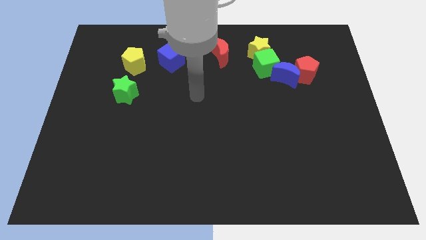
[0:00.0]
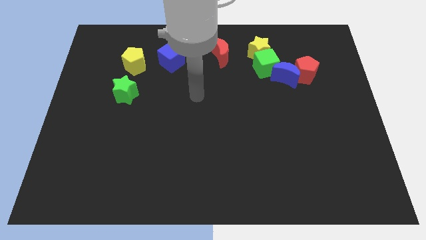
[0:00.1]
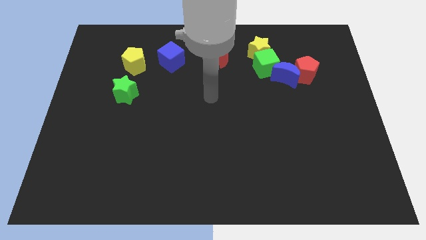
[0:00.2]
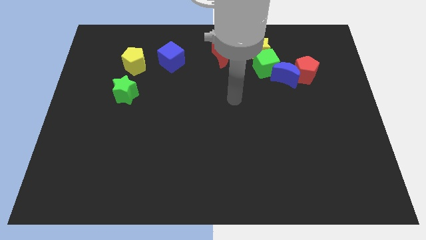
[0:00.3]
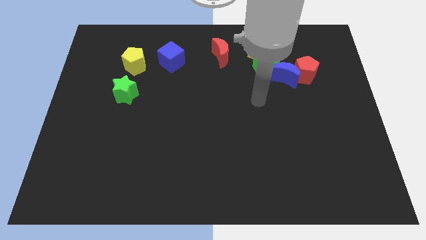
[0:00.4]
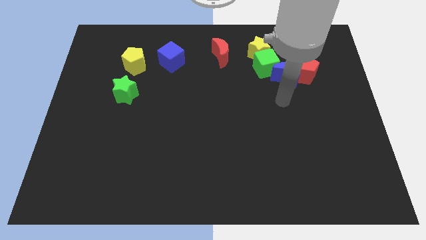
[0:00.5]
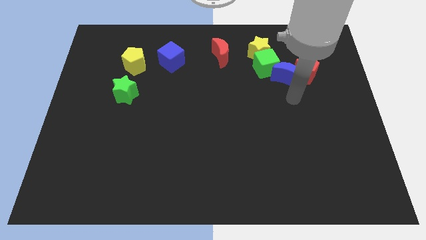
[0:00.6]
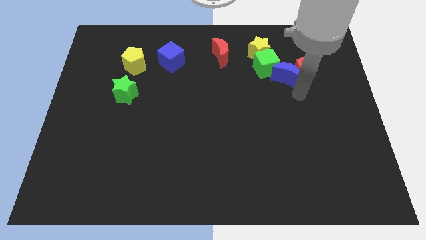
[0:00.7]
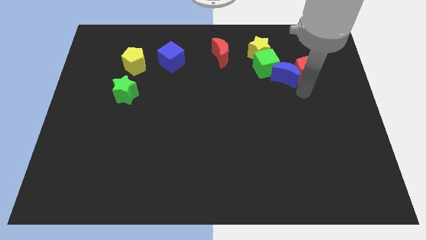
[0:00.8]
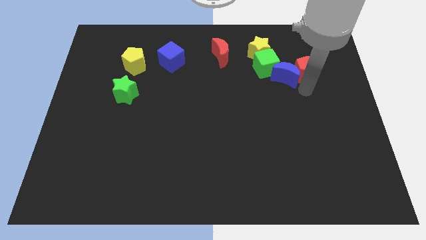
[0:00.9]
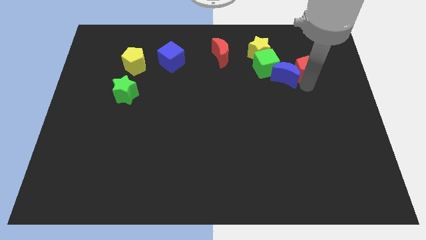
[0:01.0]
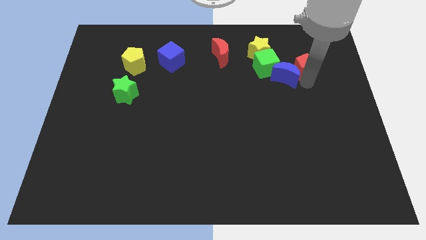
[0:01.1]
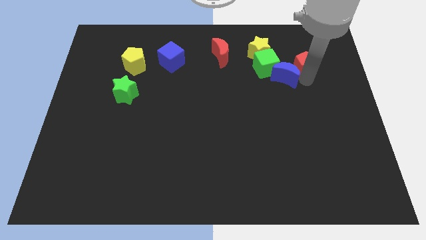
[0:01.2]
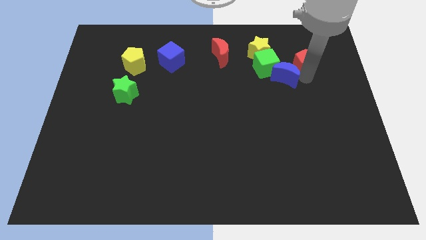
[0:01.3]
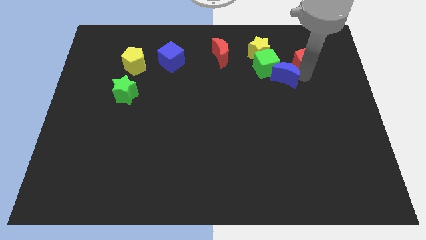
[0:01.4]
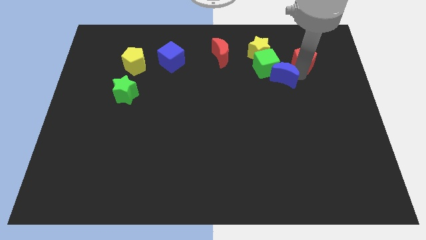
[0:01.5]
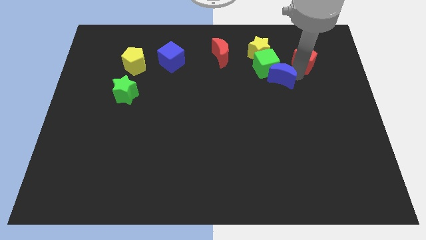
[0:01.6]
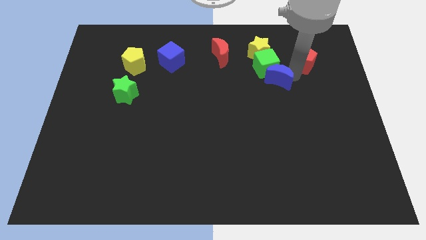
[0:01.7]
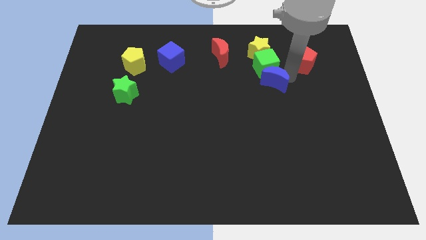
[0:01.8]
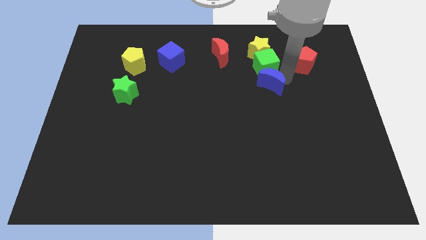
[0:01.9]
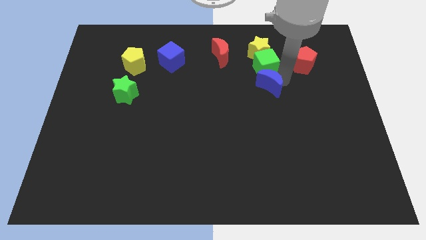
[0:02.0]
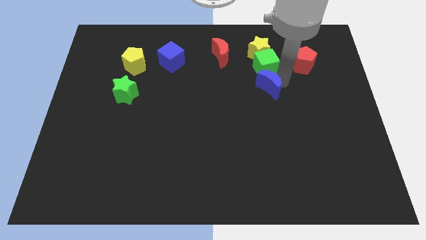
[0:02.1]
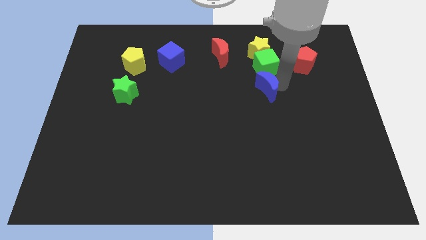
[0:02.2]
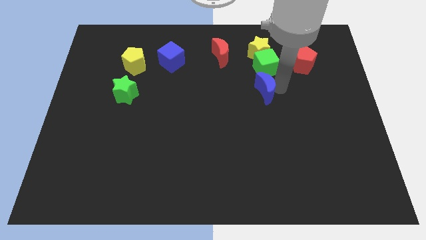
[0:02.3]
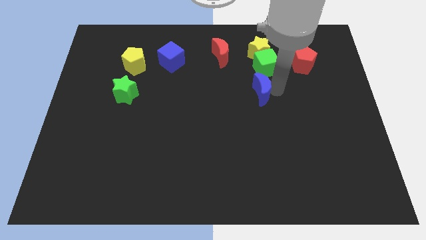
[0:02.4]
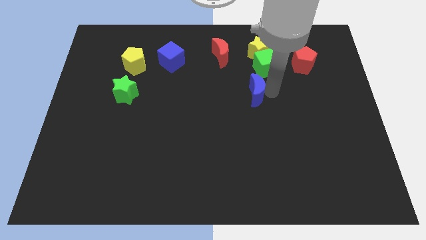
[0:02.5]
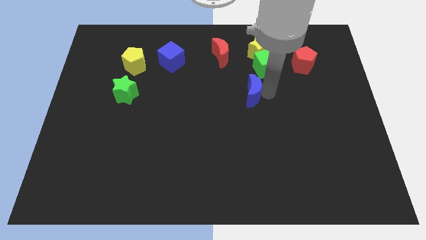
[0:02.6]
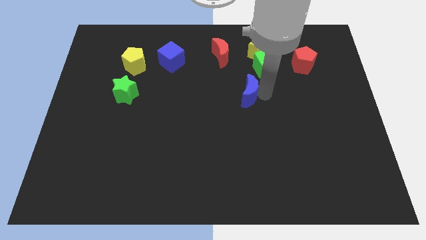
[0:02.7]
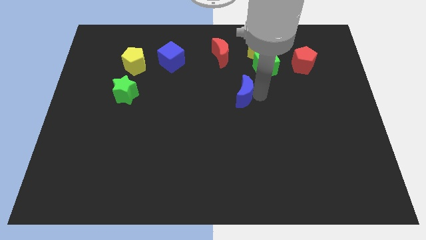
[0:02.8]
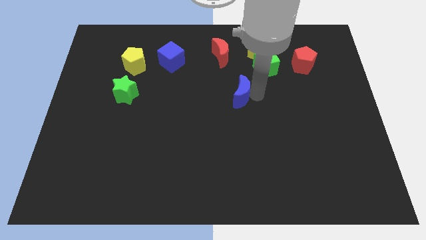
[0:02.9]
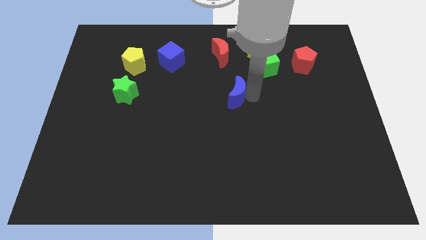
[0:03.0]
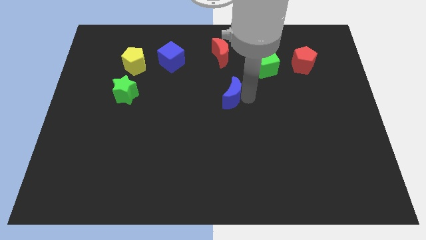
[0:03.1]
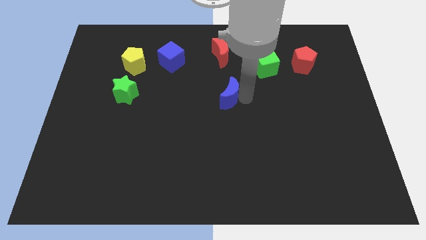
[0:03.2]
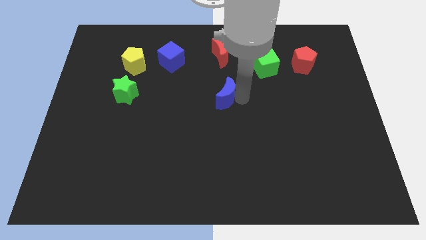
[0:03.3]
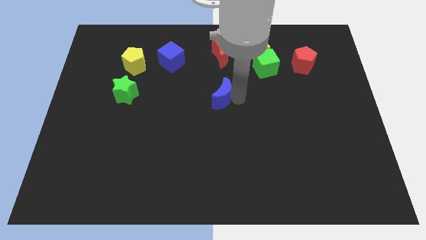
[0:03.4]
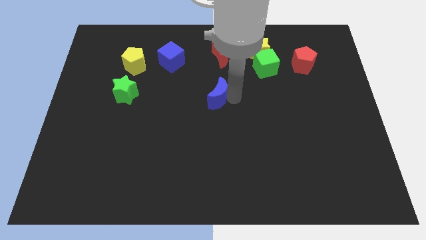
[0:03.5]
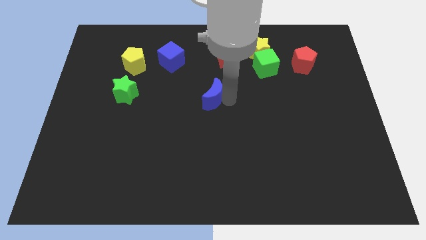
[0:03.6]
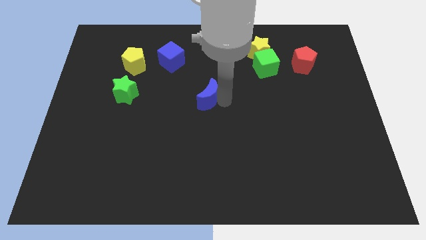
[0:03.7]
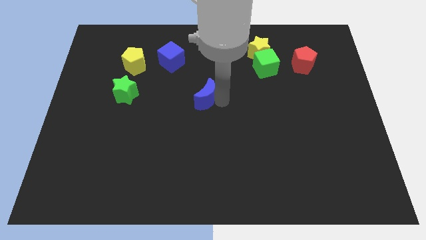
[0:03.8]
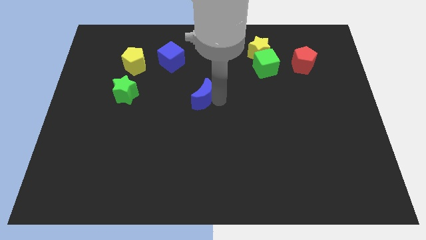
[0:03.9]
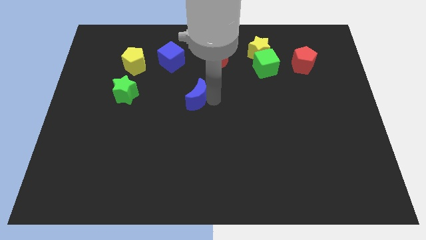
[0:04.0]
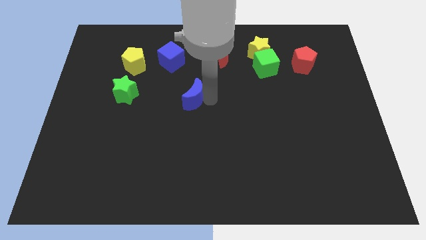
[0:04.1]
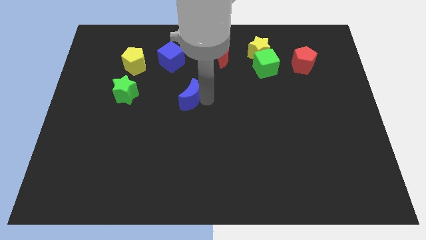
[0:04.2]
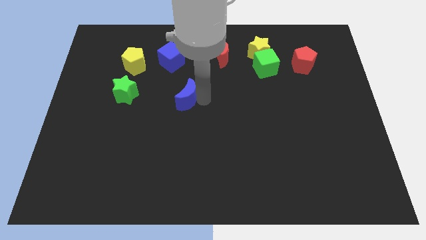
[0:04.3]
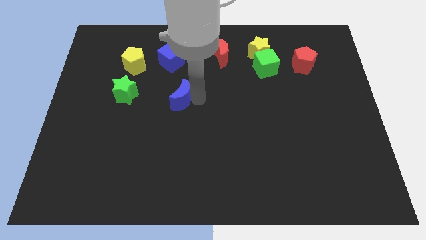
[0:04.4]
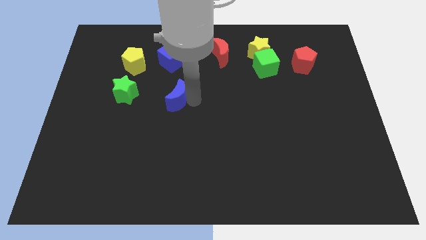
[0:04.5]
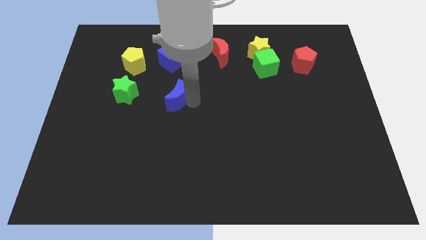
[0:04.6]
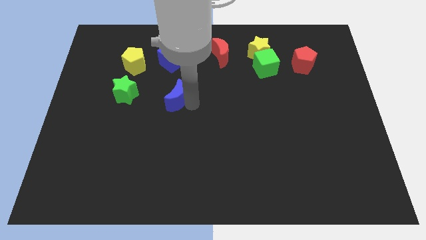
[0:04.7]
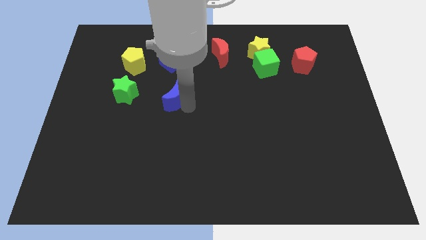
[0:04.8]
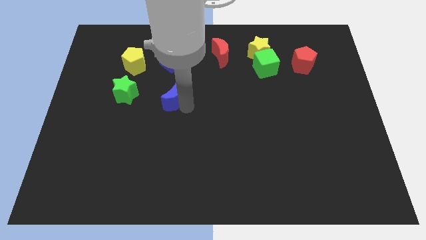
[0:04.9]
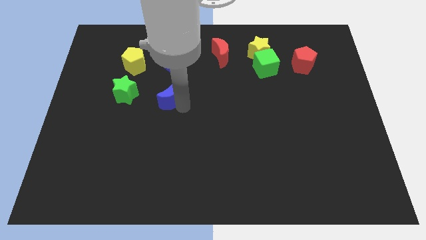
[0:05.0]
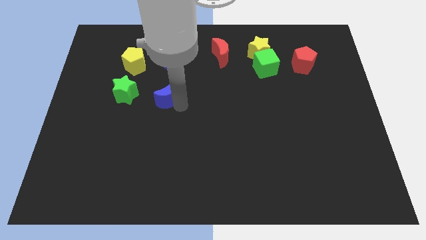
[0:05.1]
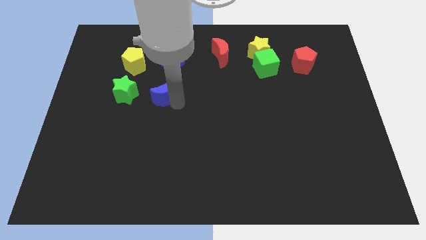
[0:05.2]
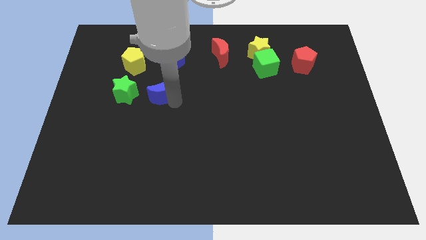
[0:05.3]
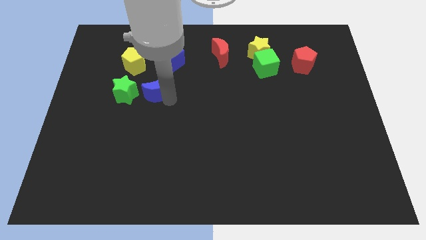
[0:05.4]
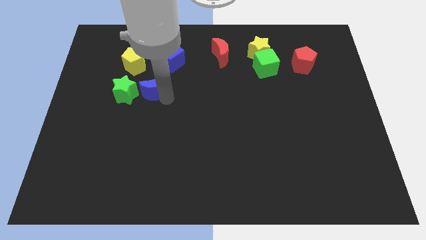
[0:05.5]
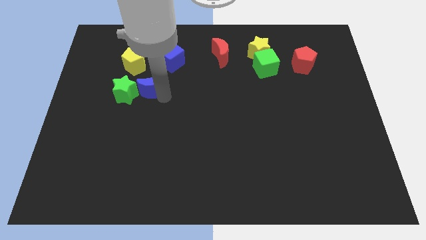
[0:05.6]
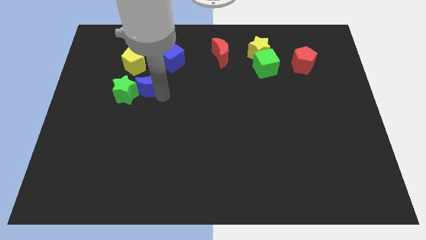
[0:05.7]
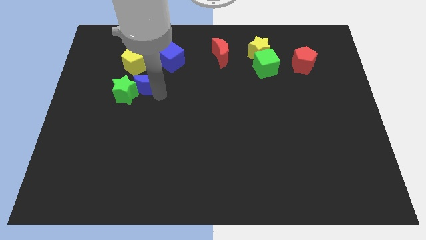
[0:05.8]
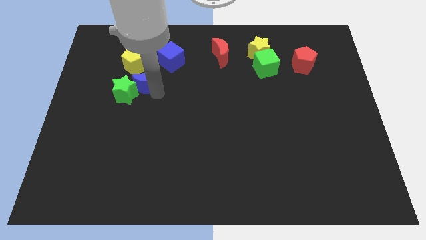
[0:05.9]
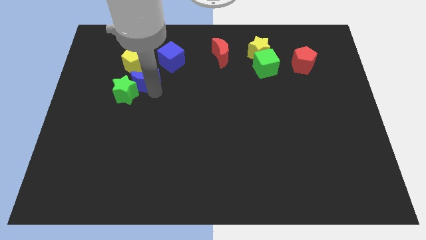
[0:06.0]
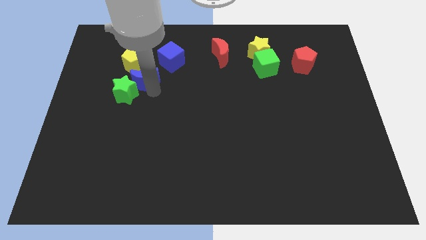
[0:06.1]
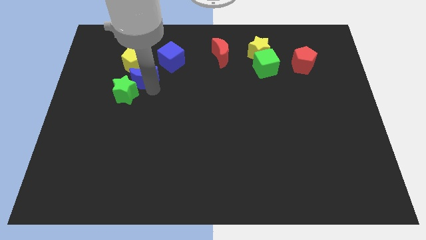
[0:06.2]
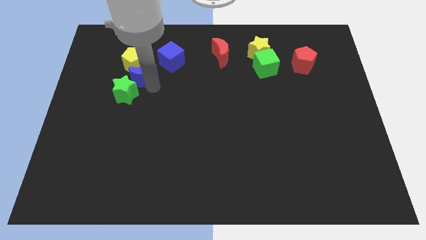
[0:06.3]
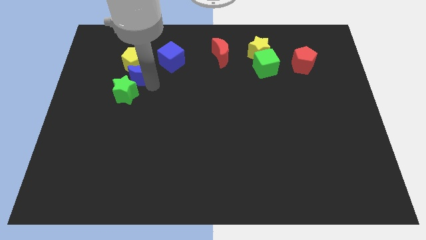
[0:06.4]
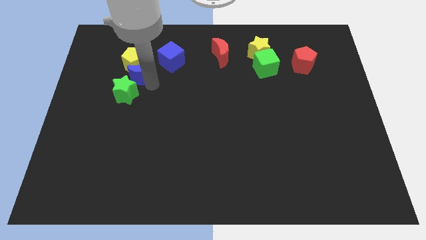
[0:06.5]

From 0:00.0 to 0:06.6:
move the blue moon close to the yellow pentagon

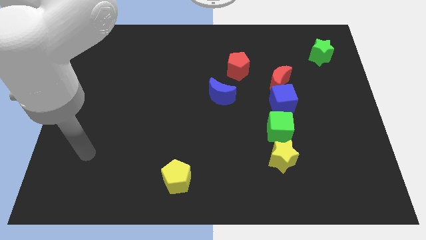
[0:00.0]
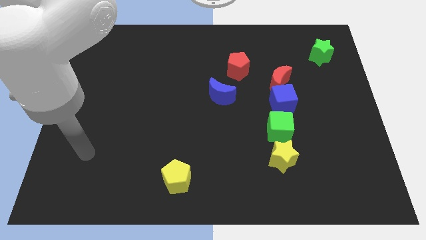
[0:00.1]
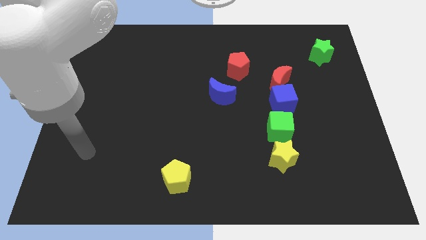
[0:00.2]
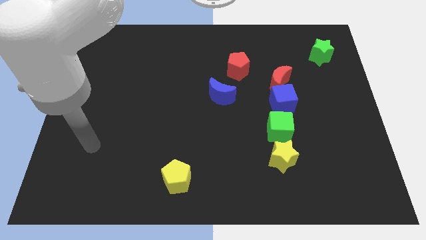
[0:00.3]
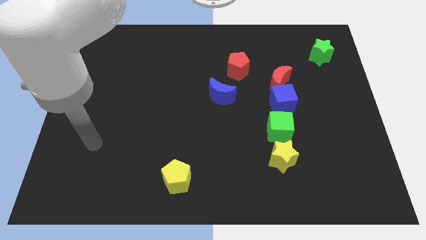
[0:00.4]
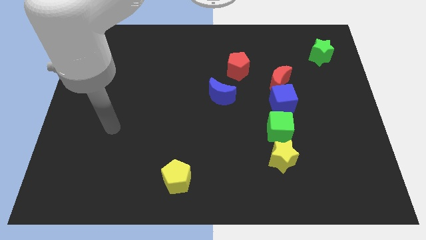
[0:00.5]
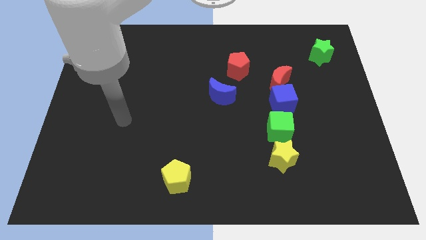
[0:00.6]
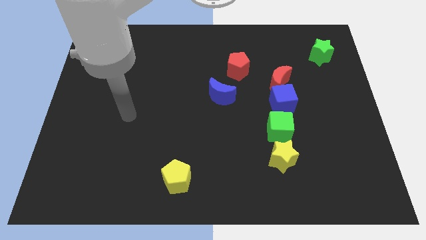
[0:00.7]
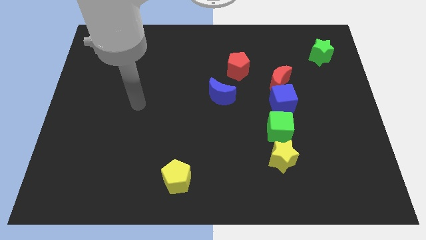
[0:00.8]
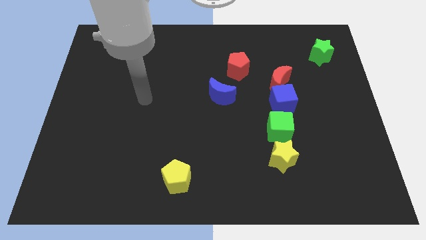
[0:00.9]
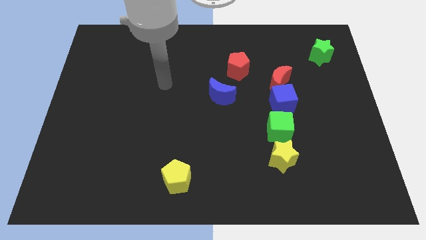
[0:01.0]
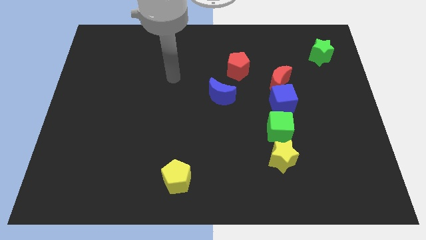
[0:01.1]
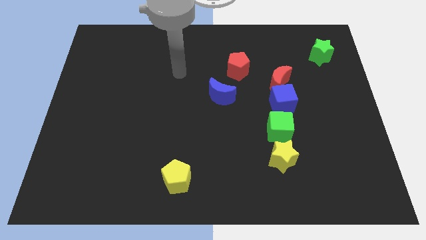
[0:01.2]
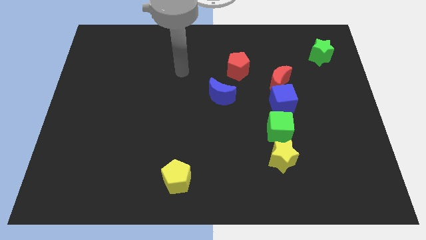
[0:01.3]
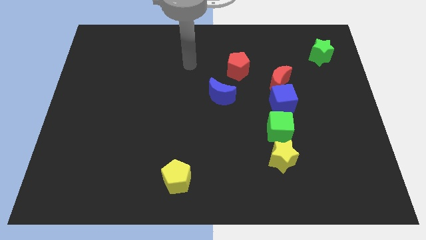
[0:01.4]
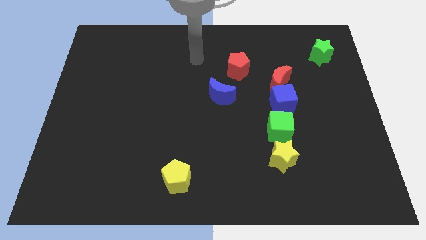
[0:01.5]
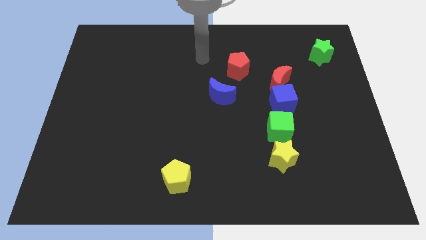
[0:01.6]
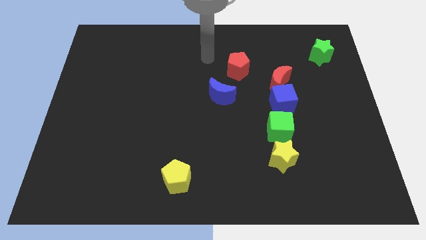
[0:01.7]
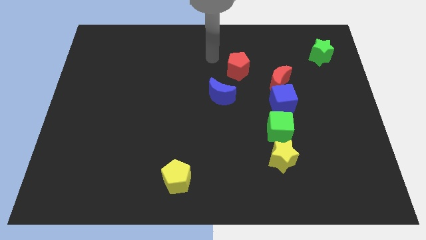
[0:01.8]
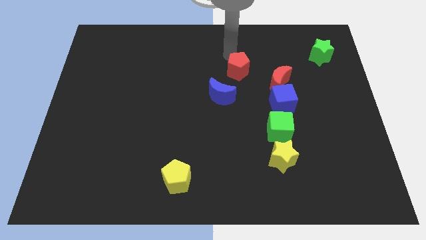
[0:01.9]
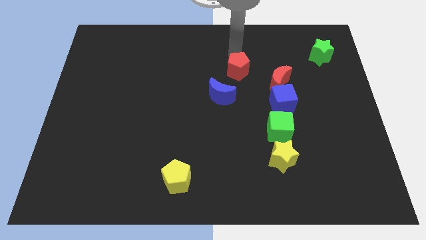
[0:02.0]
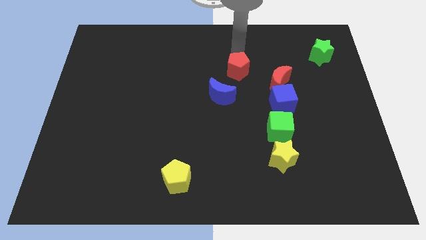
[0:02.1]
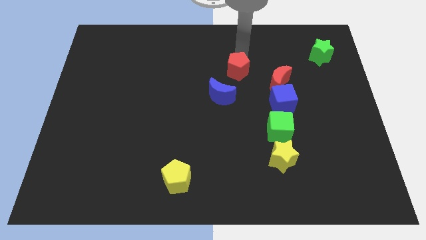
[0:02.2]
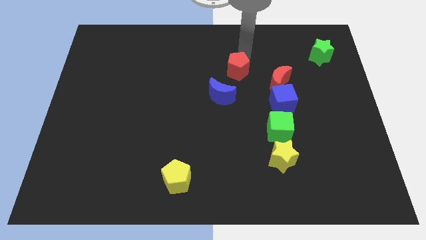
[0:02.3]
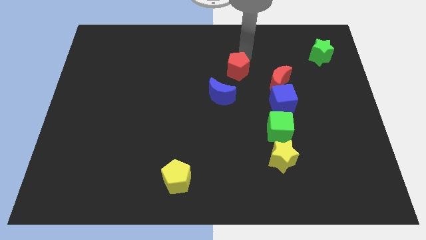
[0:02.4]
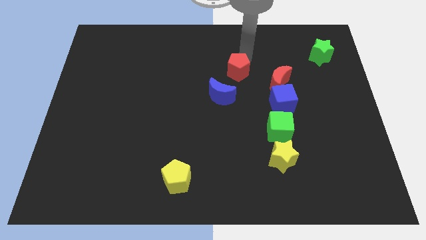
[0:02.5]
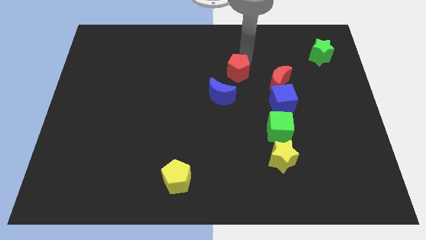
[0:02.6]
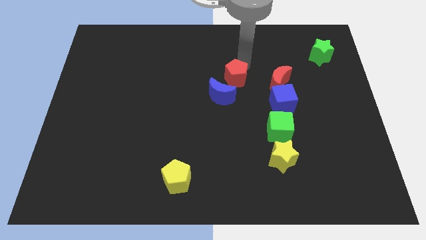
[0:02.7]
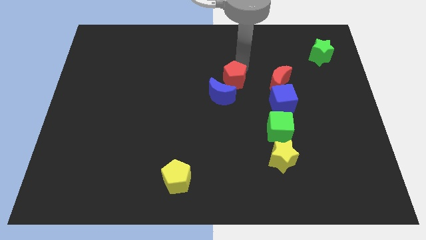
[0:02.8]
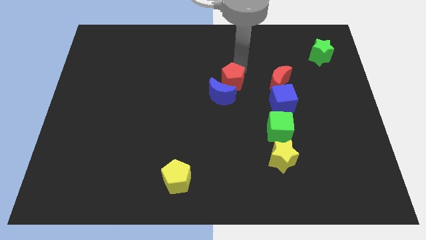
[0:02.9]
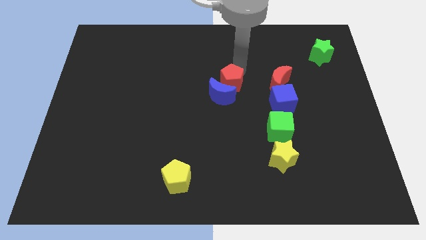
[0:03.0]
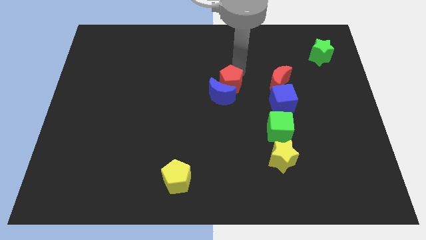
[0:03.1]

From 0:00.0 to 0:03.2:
put the red pentagon close to the blue moon
